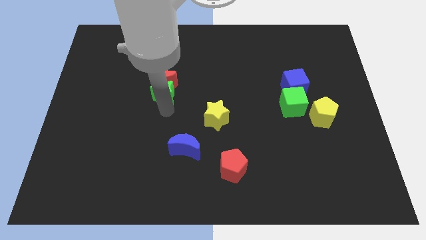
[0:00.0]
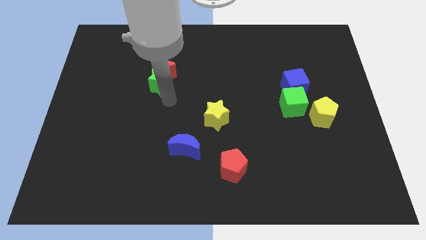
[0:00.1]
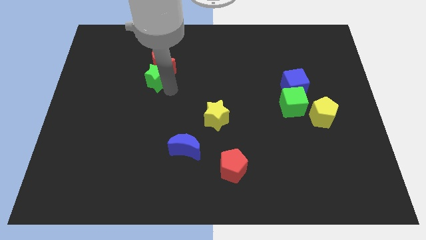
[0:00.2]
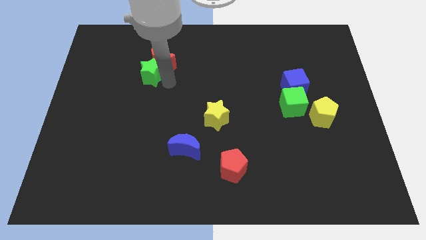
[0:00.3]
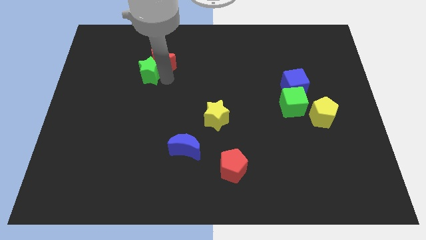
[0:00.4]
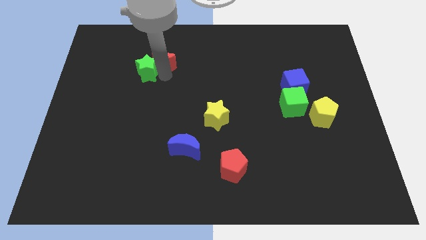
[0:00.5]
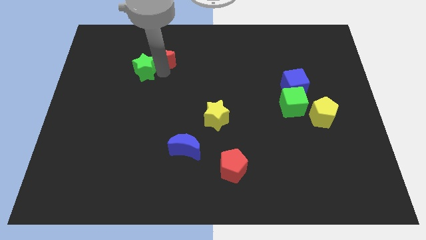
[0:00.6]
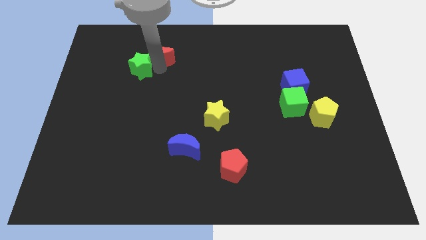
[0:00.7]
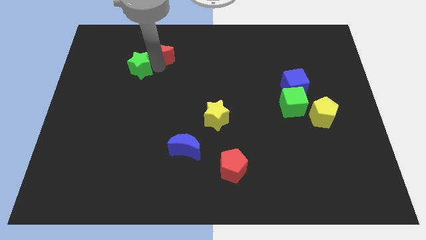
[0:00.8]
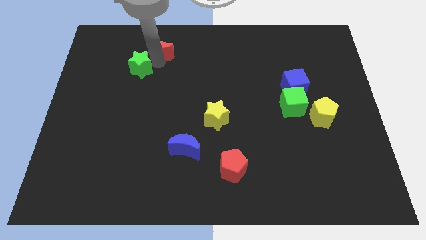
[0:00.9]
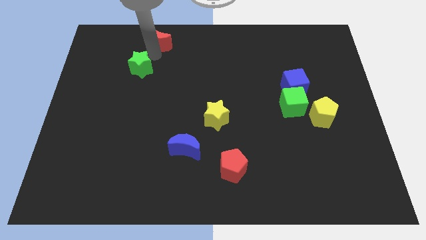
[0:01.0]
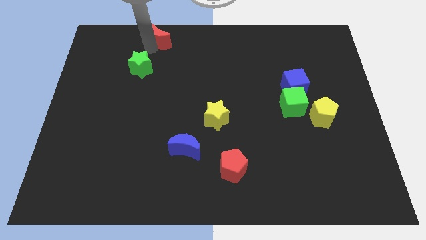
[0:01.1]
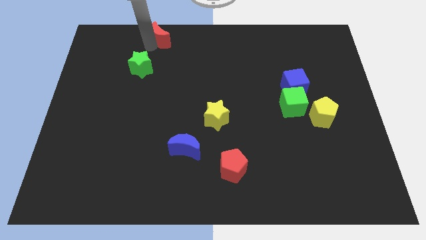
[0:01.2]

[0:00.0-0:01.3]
separate red moon from green star

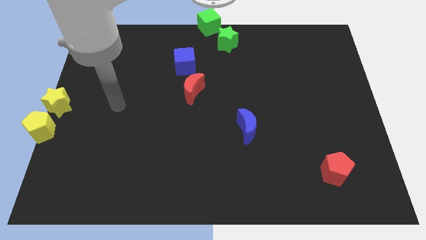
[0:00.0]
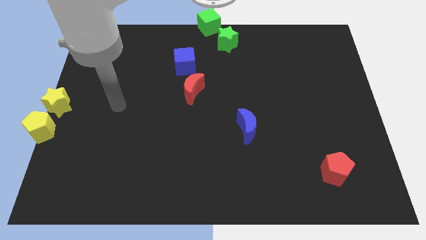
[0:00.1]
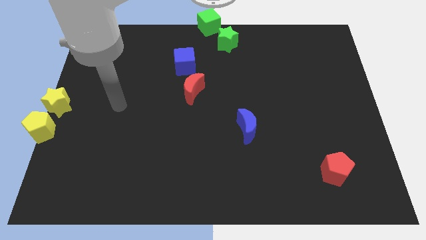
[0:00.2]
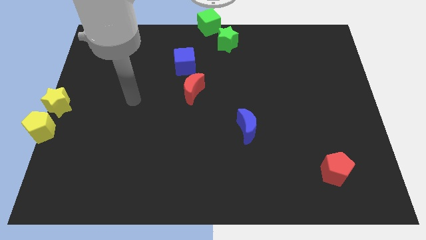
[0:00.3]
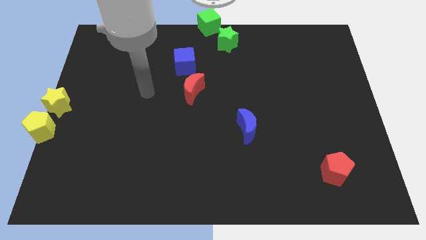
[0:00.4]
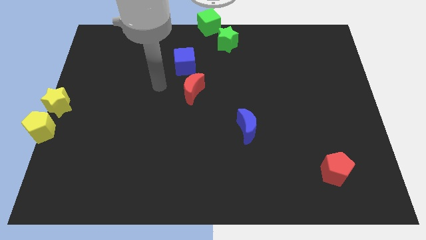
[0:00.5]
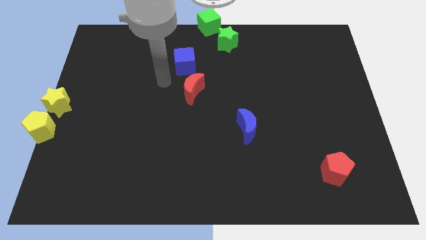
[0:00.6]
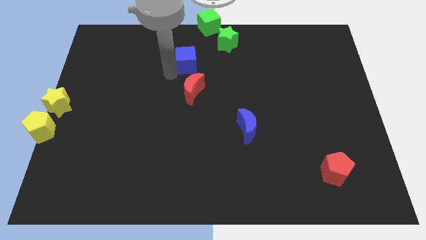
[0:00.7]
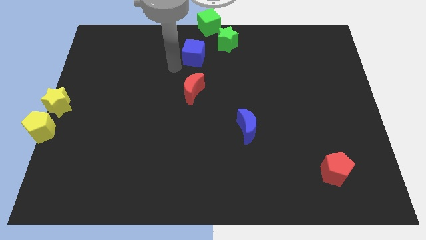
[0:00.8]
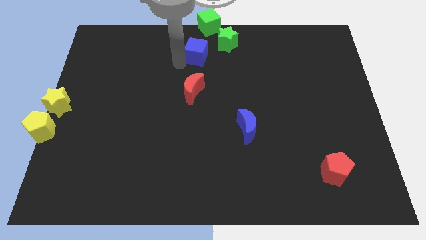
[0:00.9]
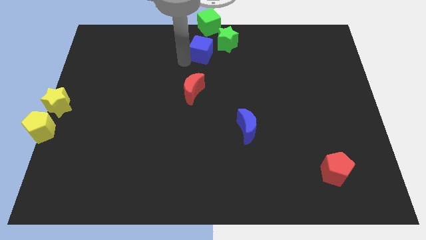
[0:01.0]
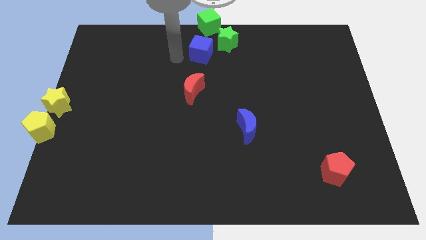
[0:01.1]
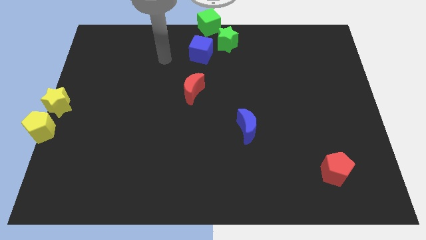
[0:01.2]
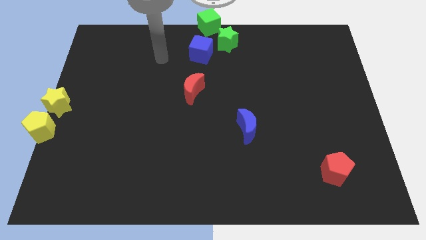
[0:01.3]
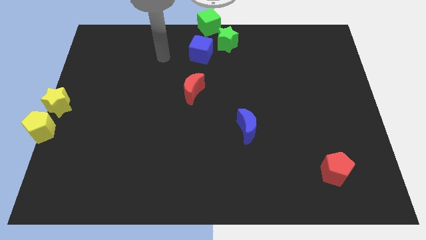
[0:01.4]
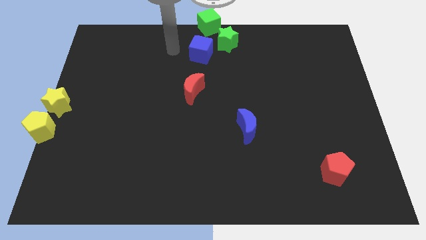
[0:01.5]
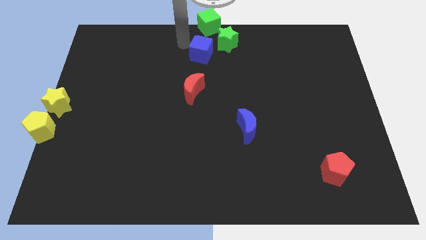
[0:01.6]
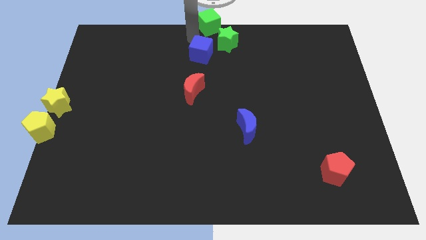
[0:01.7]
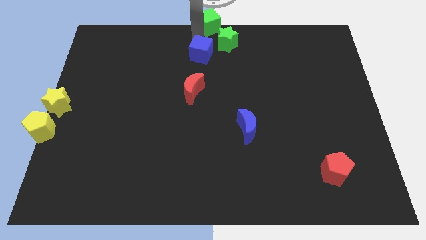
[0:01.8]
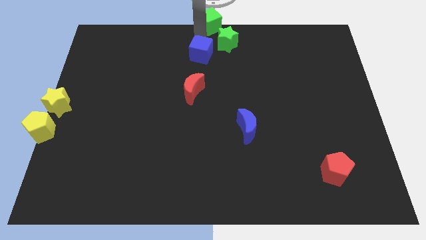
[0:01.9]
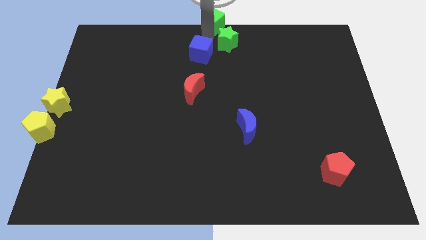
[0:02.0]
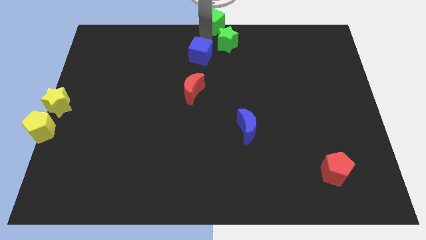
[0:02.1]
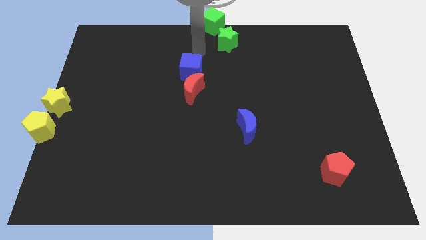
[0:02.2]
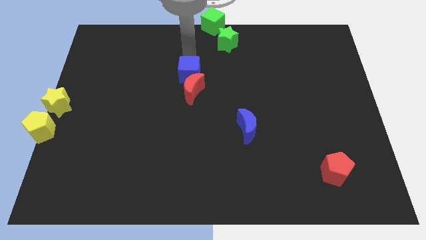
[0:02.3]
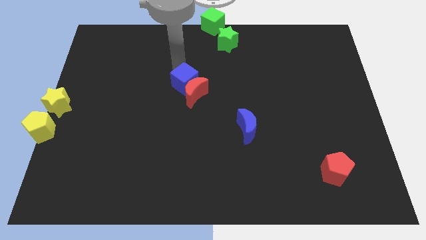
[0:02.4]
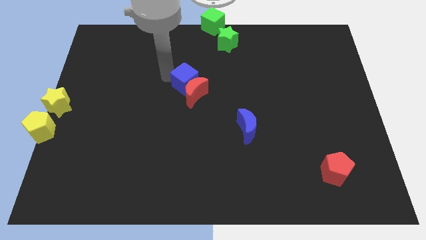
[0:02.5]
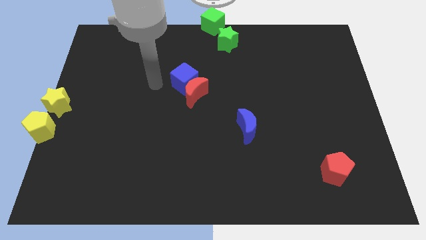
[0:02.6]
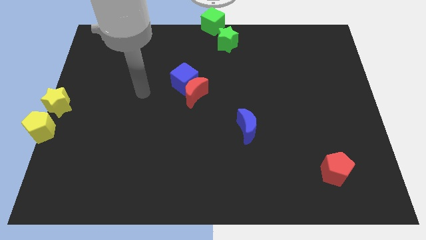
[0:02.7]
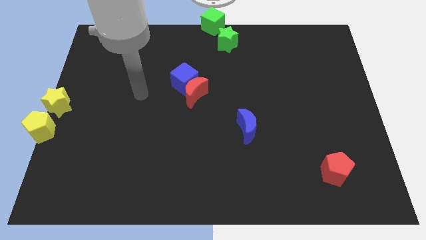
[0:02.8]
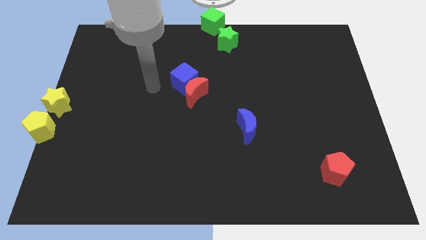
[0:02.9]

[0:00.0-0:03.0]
move blue cube into red moon

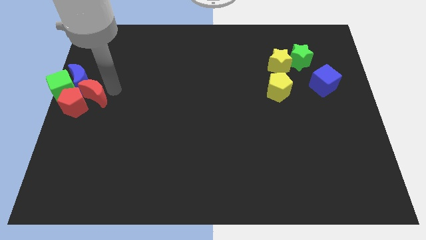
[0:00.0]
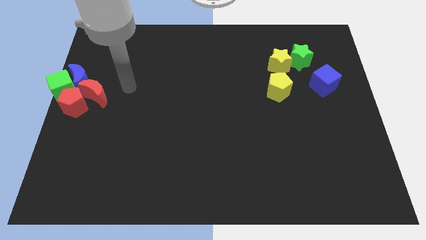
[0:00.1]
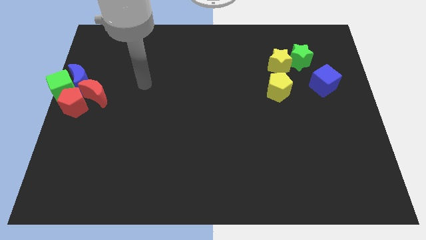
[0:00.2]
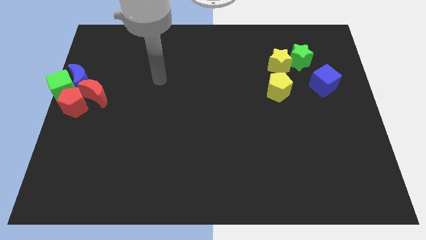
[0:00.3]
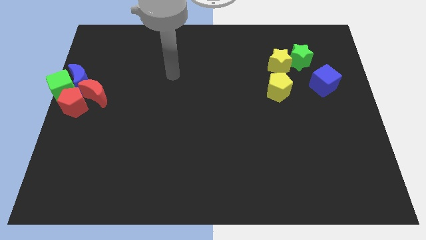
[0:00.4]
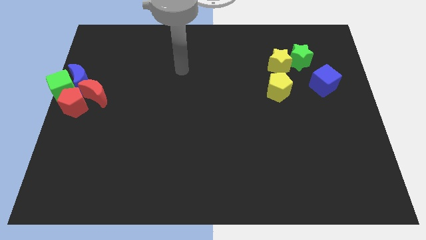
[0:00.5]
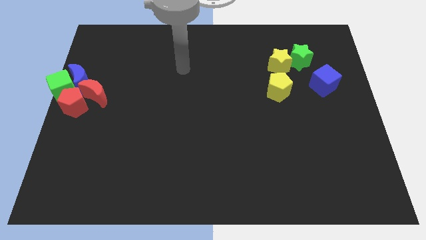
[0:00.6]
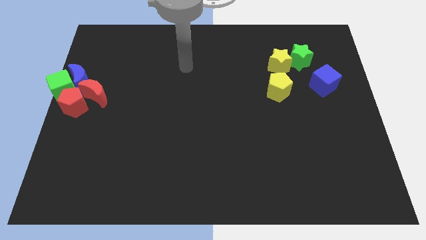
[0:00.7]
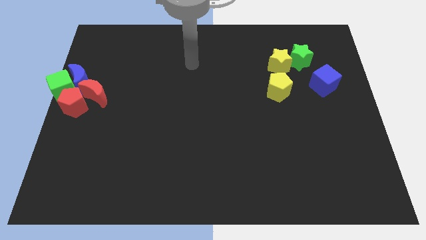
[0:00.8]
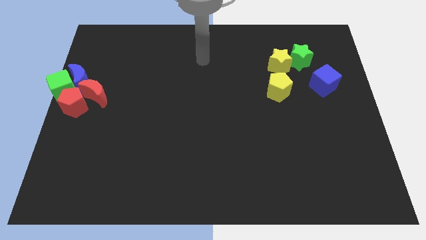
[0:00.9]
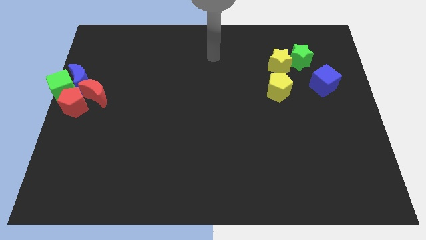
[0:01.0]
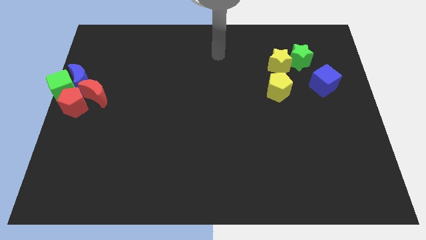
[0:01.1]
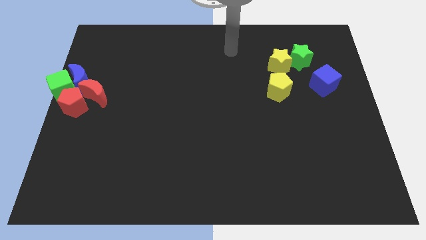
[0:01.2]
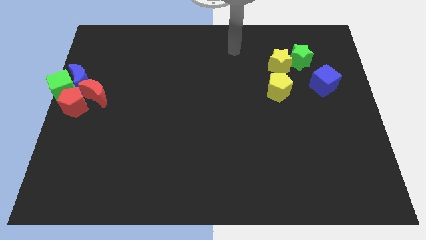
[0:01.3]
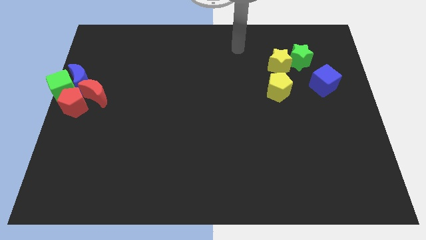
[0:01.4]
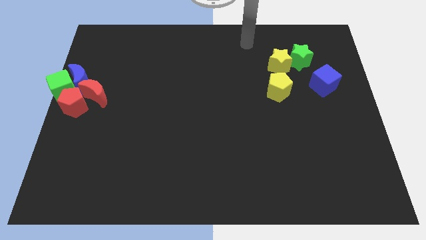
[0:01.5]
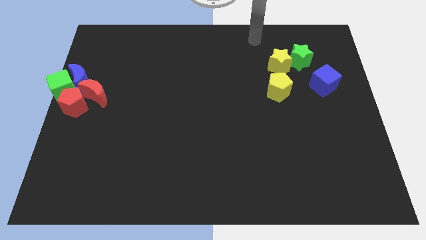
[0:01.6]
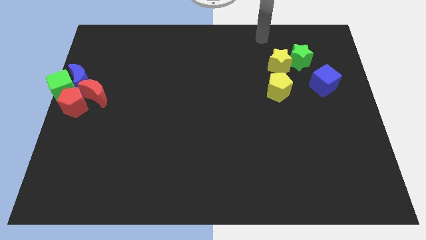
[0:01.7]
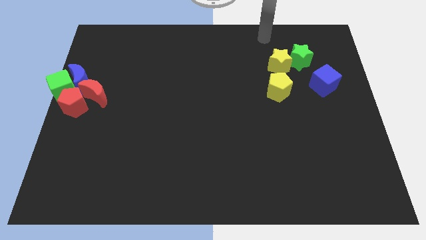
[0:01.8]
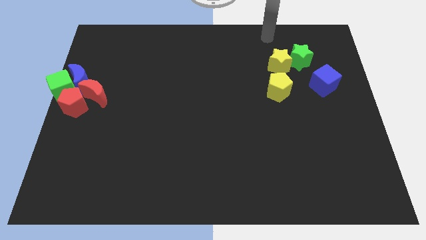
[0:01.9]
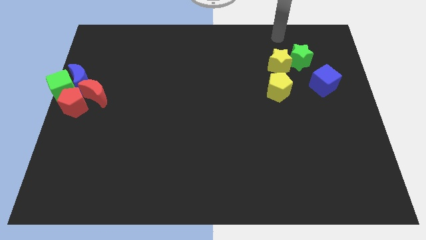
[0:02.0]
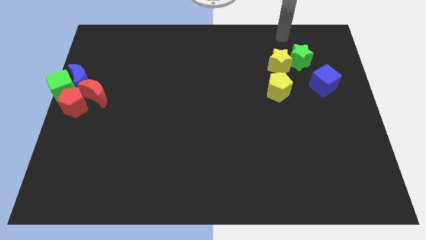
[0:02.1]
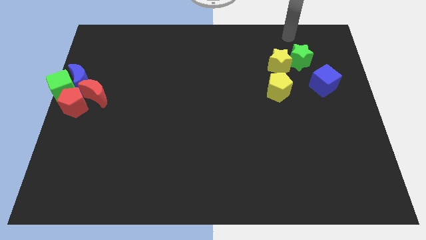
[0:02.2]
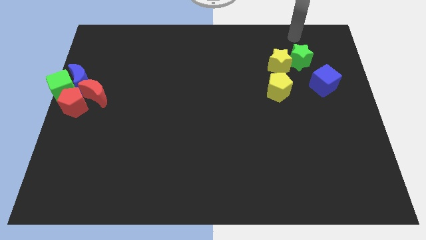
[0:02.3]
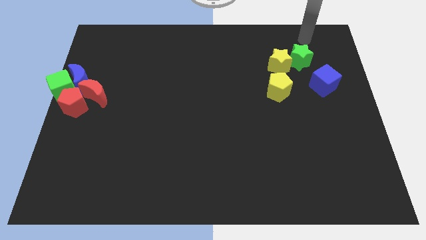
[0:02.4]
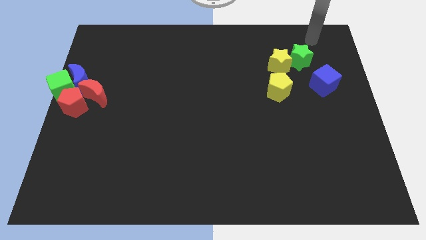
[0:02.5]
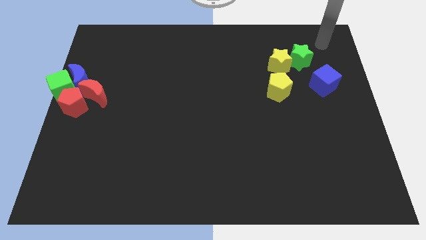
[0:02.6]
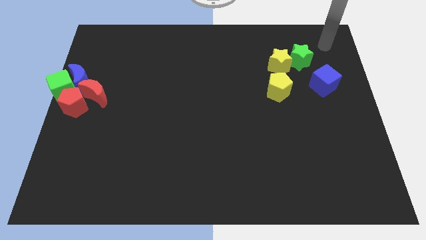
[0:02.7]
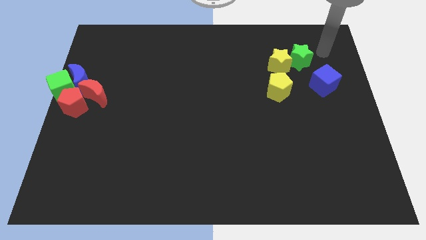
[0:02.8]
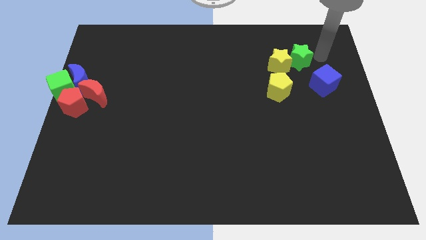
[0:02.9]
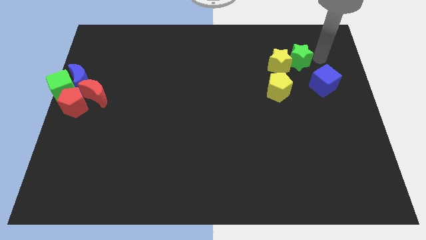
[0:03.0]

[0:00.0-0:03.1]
move your arm to the top left of the green star

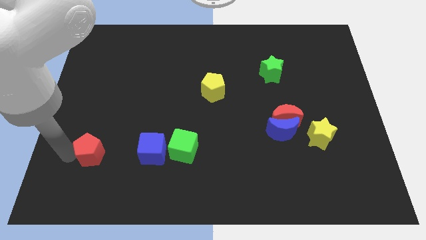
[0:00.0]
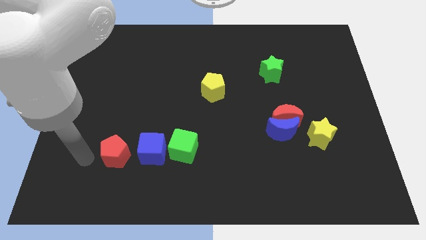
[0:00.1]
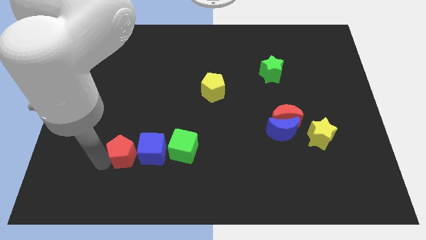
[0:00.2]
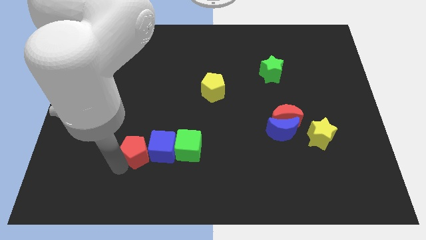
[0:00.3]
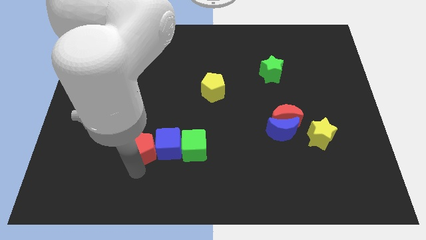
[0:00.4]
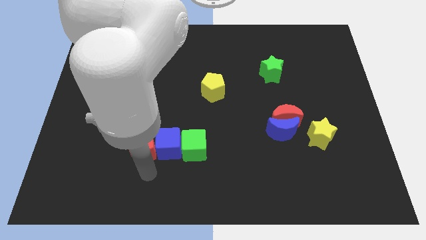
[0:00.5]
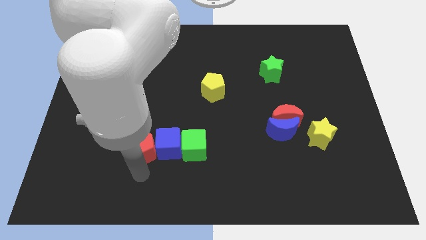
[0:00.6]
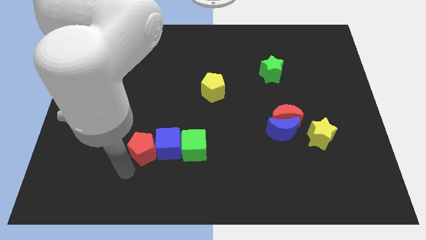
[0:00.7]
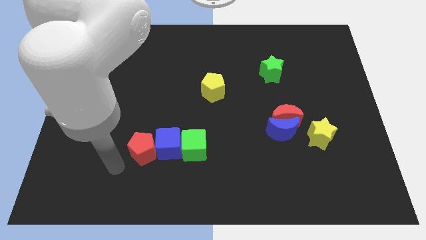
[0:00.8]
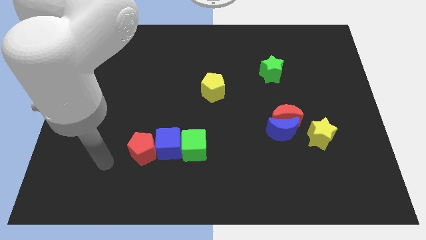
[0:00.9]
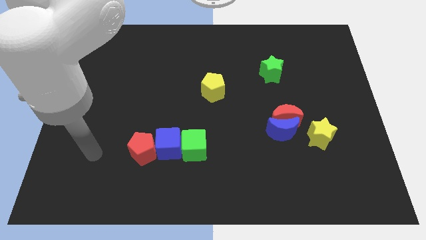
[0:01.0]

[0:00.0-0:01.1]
move the red pentagon to the left of the blue cube

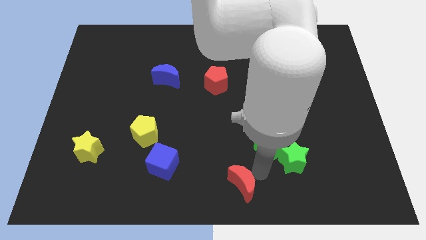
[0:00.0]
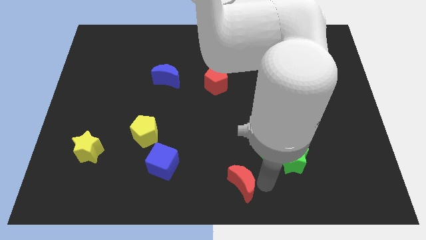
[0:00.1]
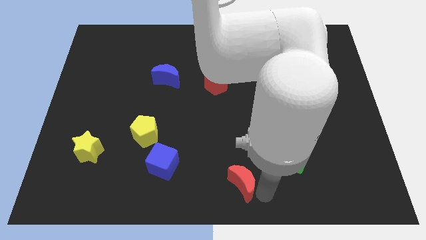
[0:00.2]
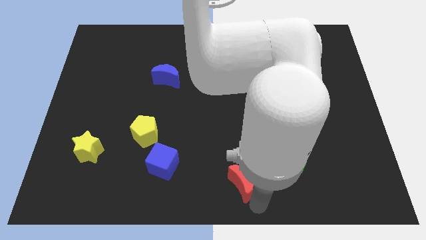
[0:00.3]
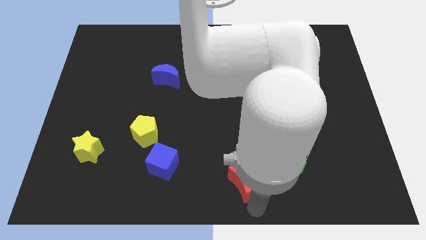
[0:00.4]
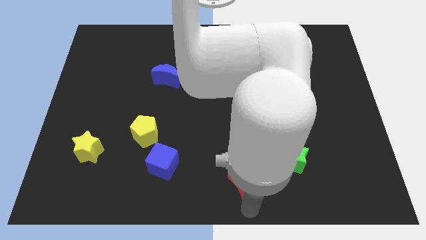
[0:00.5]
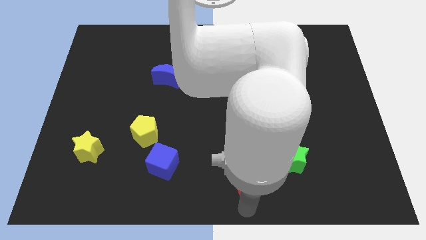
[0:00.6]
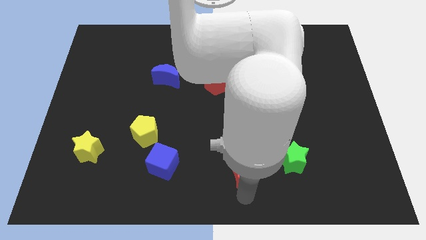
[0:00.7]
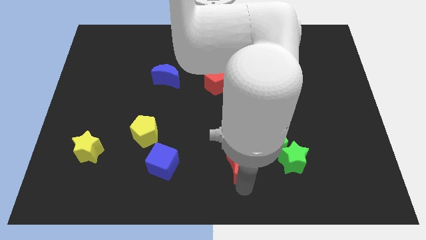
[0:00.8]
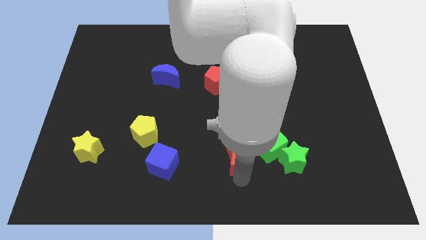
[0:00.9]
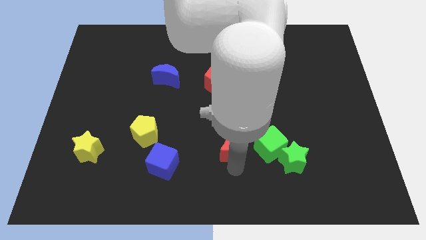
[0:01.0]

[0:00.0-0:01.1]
place the red crescent left of green cube
